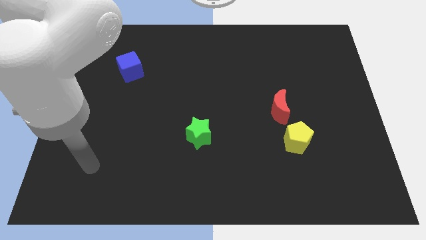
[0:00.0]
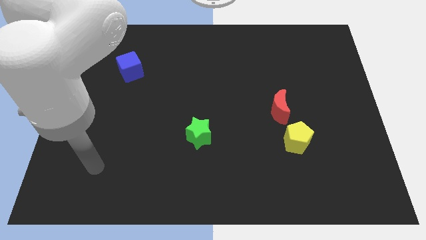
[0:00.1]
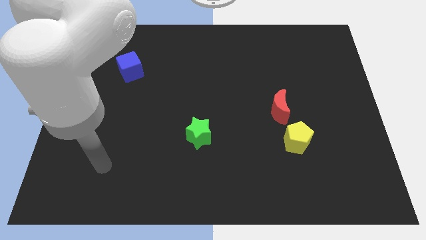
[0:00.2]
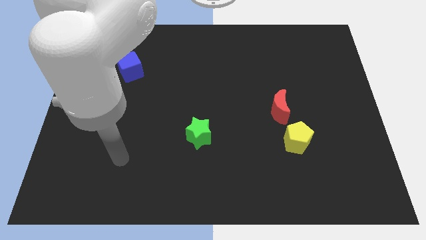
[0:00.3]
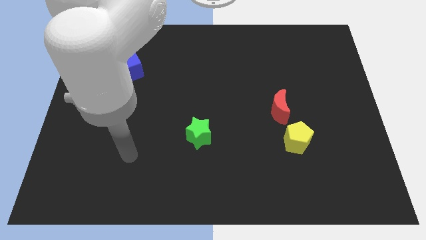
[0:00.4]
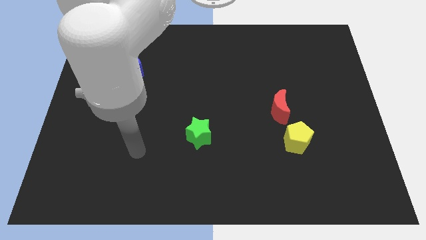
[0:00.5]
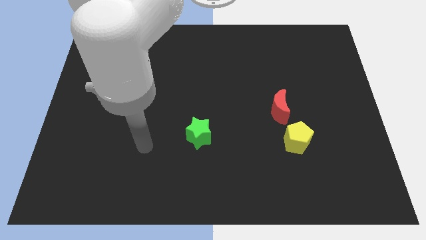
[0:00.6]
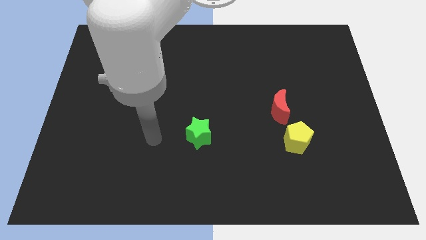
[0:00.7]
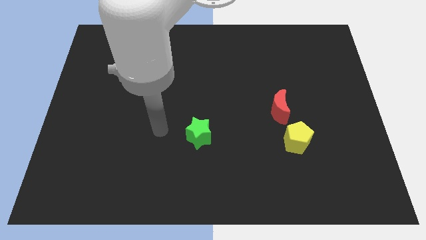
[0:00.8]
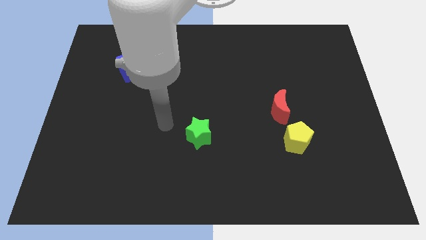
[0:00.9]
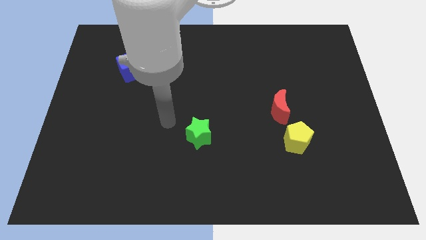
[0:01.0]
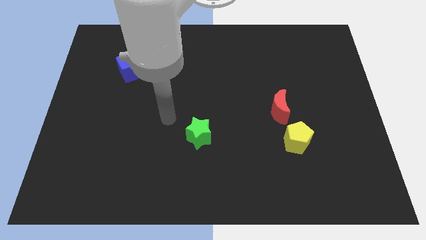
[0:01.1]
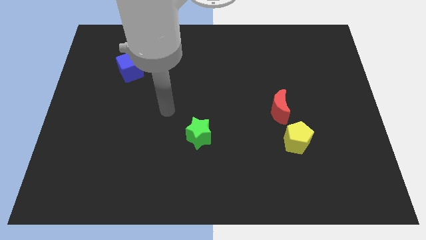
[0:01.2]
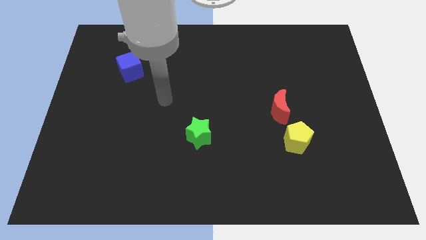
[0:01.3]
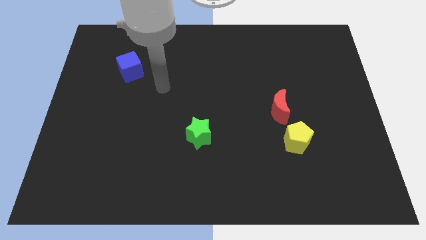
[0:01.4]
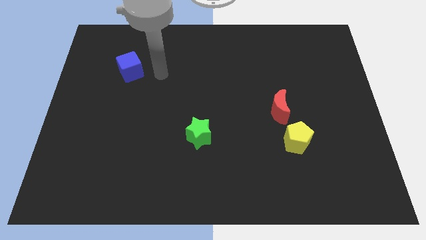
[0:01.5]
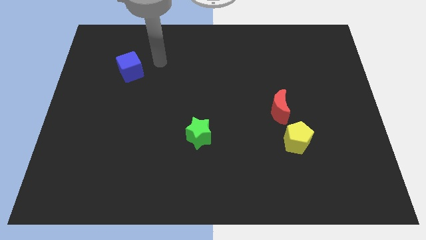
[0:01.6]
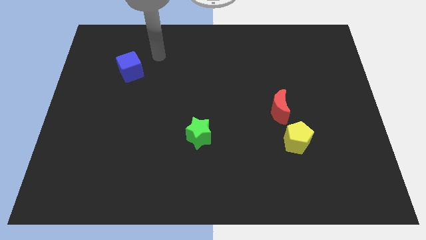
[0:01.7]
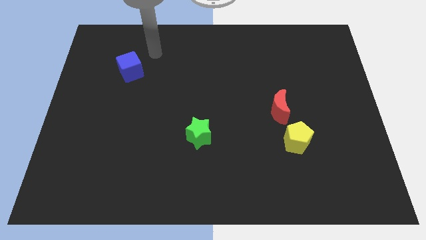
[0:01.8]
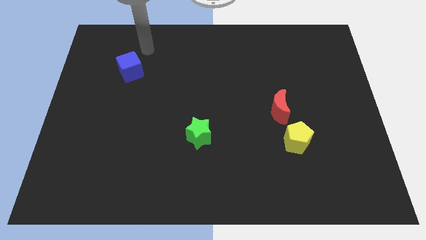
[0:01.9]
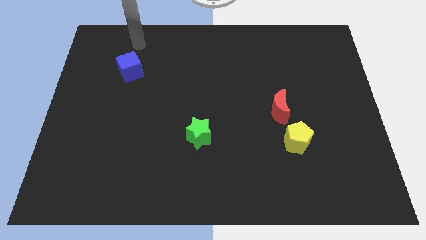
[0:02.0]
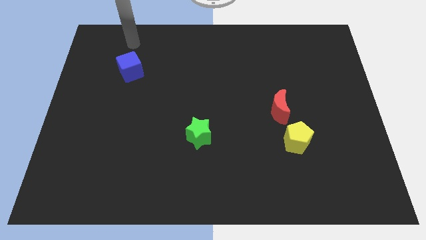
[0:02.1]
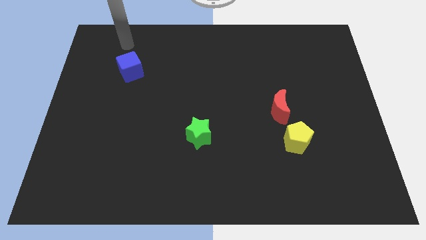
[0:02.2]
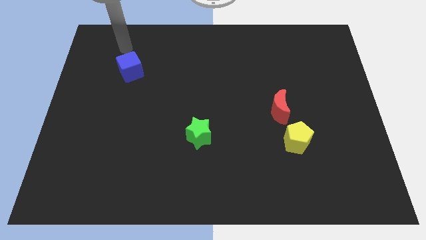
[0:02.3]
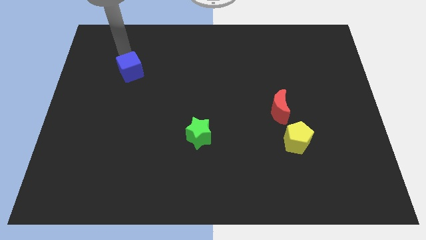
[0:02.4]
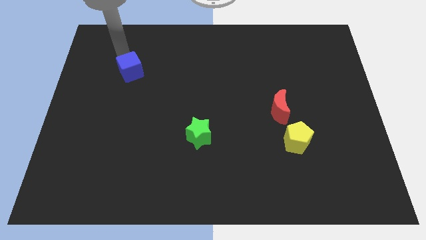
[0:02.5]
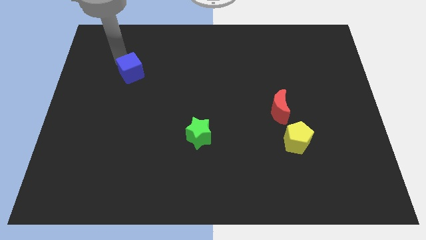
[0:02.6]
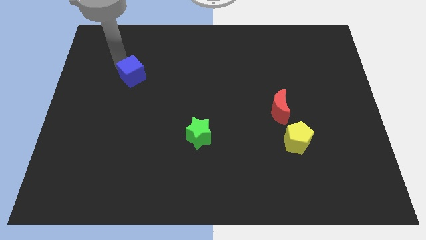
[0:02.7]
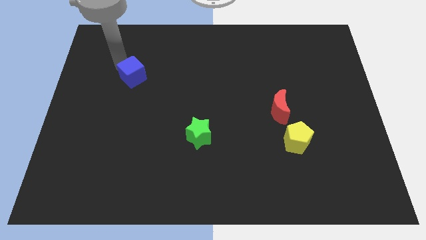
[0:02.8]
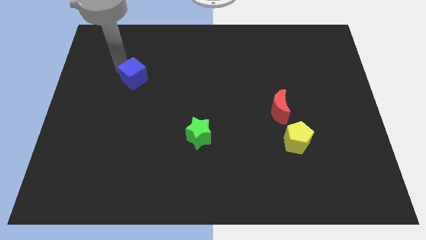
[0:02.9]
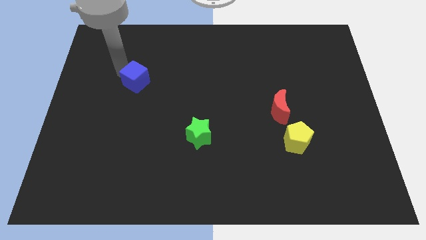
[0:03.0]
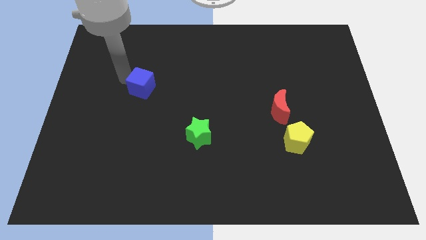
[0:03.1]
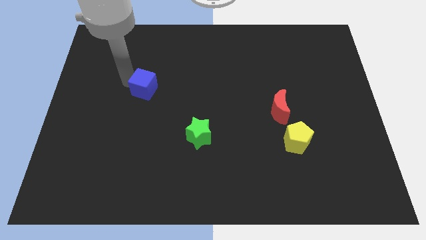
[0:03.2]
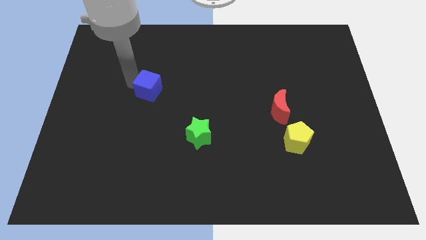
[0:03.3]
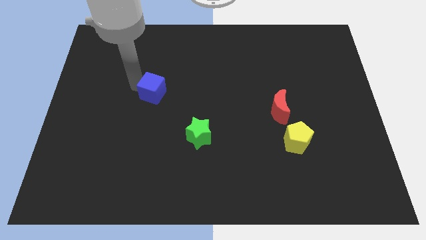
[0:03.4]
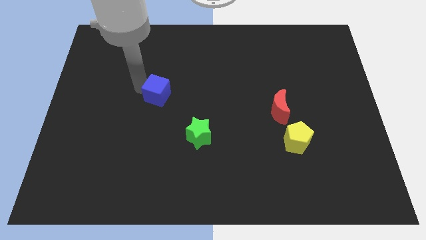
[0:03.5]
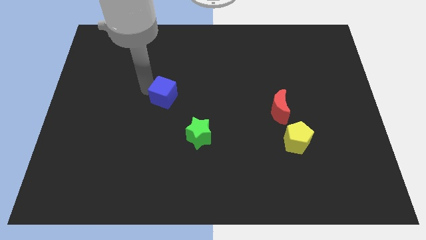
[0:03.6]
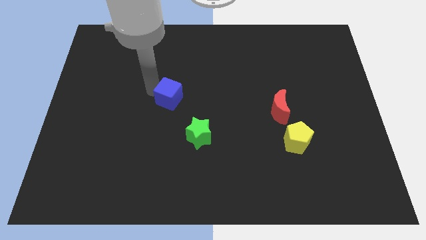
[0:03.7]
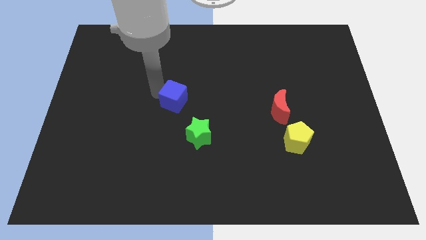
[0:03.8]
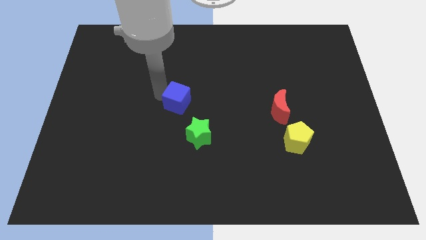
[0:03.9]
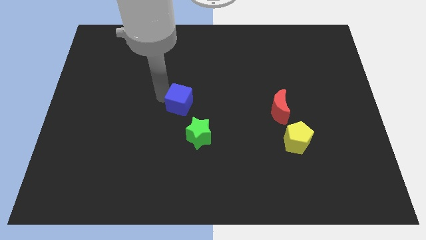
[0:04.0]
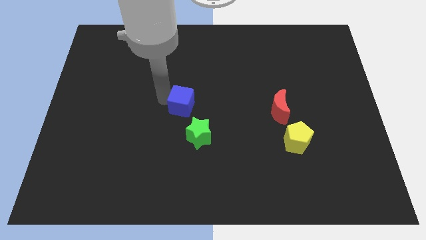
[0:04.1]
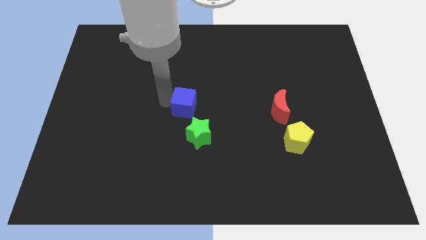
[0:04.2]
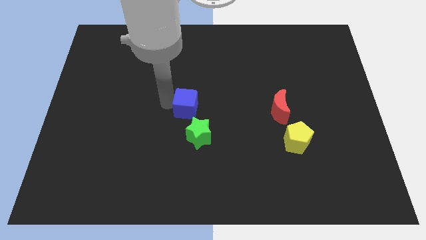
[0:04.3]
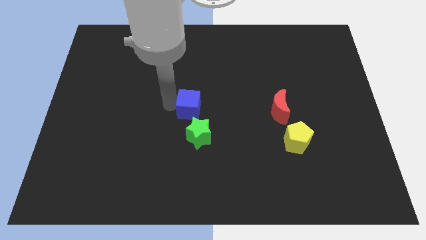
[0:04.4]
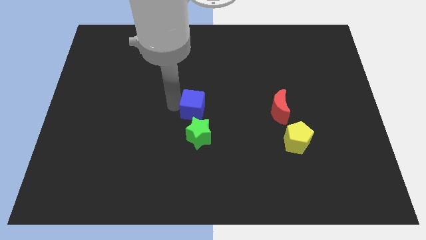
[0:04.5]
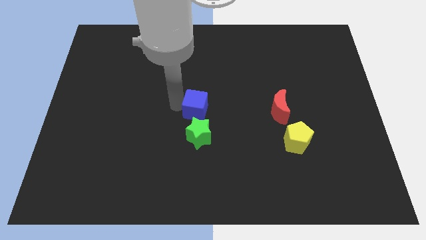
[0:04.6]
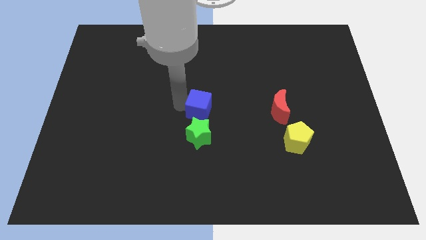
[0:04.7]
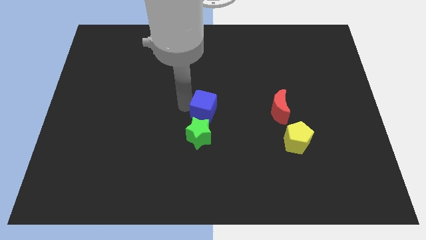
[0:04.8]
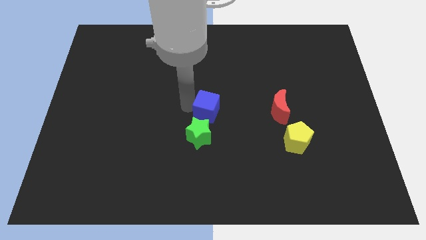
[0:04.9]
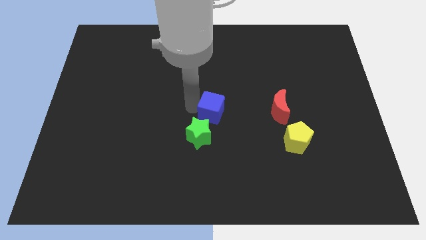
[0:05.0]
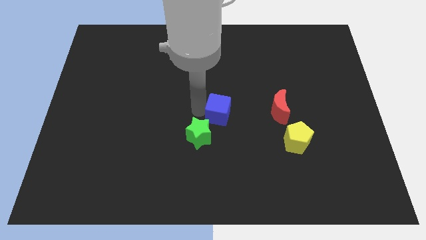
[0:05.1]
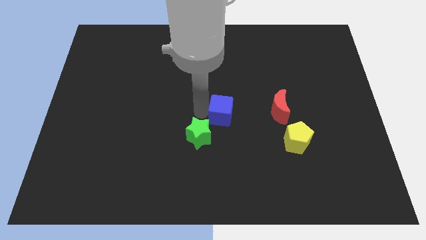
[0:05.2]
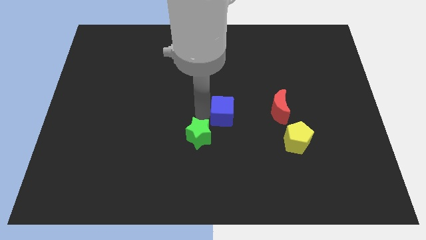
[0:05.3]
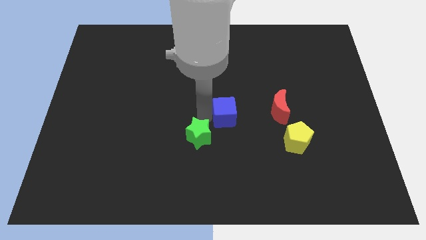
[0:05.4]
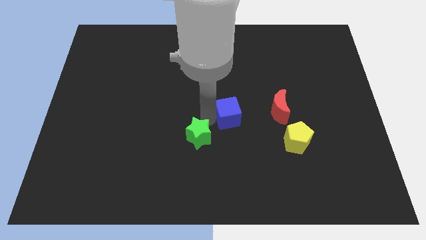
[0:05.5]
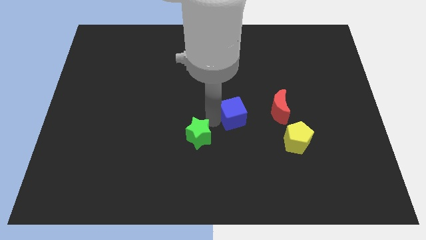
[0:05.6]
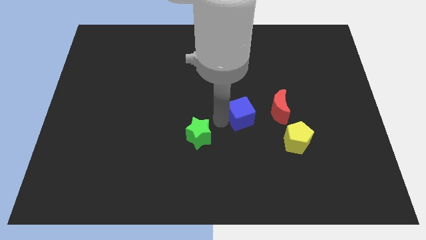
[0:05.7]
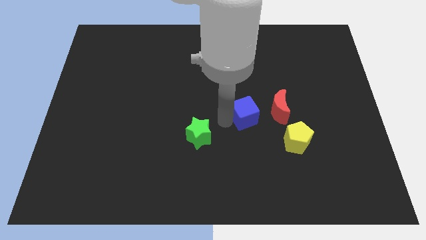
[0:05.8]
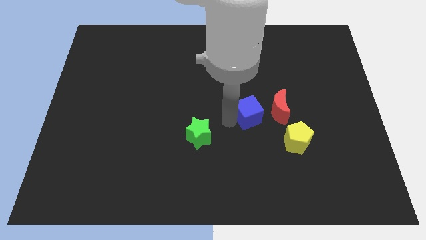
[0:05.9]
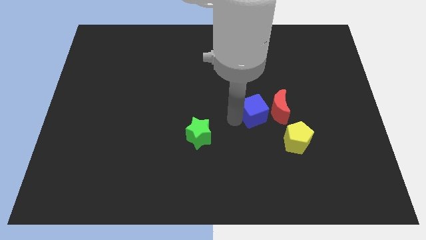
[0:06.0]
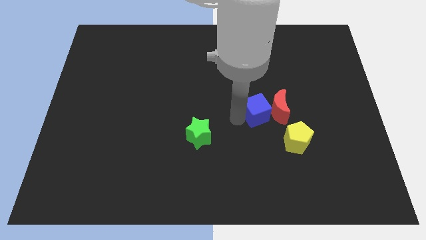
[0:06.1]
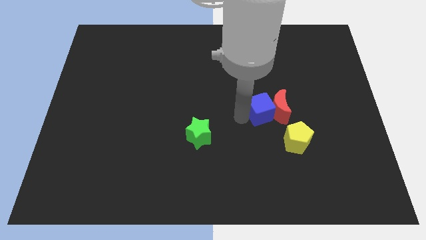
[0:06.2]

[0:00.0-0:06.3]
push the blue block to the red moon

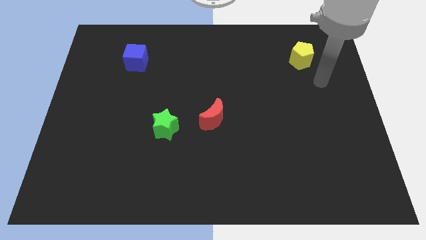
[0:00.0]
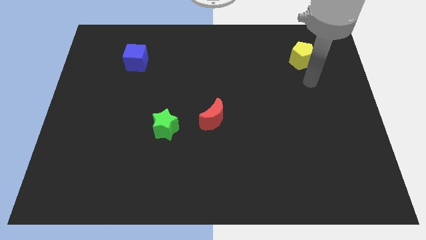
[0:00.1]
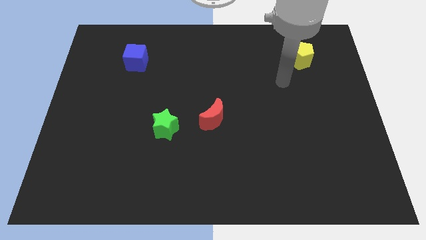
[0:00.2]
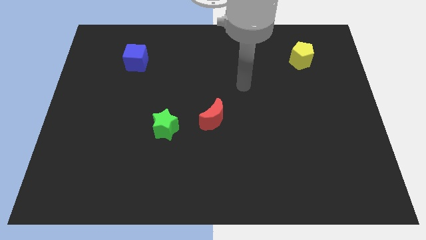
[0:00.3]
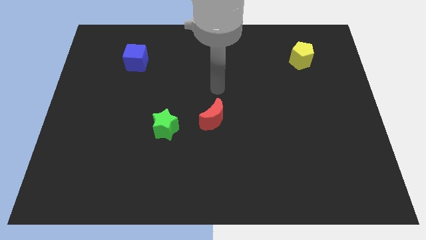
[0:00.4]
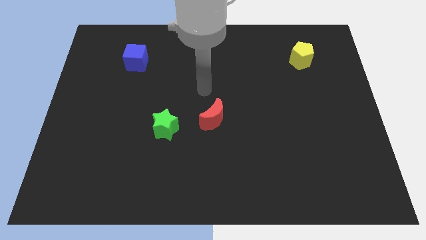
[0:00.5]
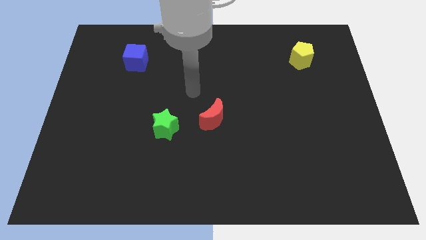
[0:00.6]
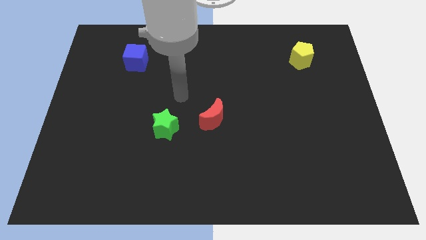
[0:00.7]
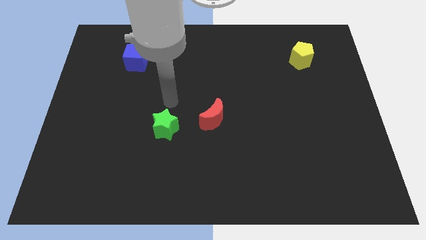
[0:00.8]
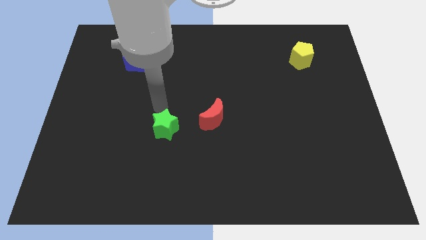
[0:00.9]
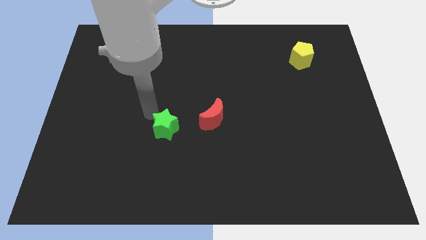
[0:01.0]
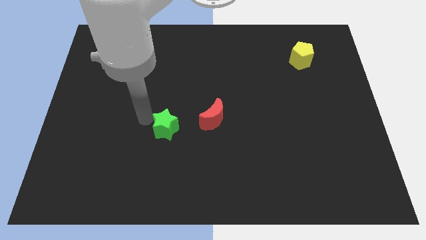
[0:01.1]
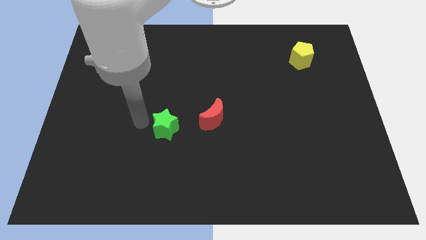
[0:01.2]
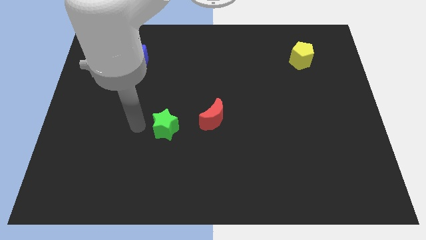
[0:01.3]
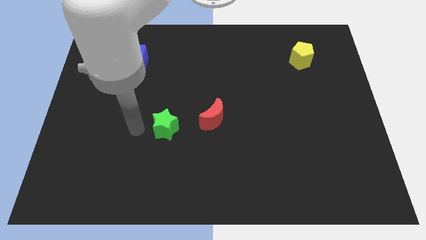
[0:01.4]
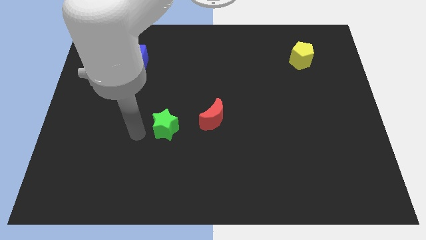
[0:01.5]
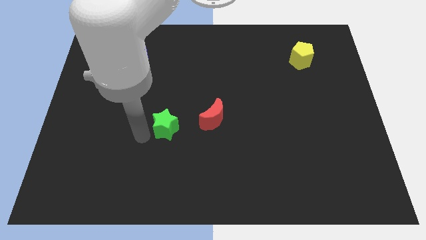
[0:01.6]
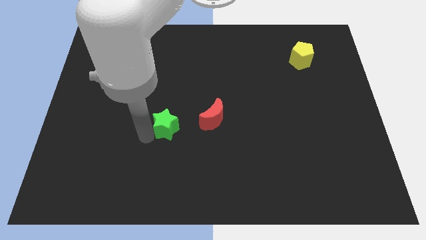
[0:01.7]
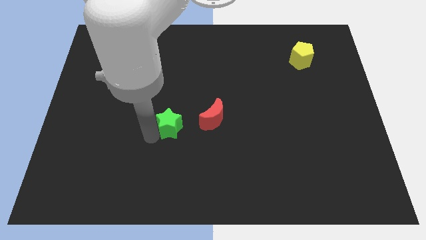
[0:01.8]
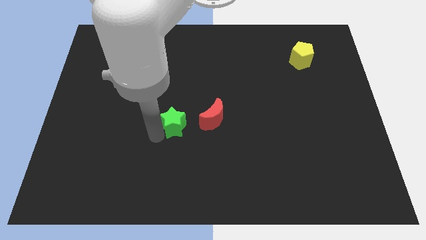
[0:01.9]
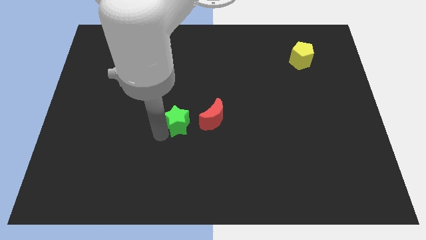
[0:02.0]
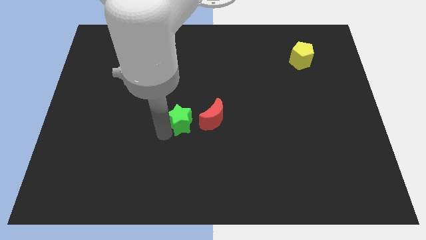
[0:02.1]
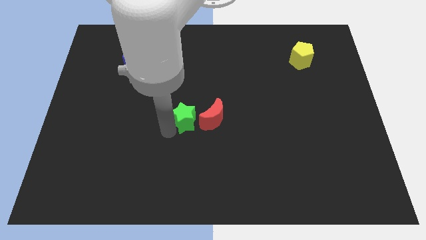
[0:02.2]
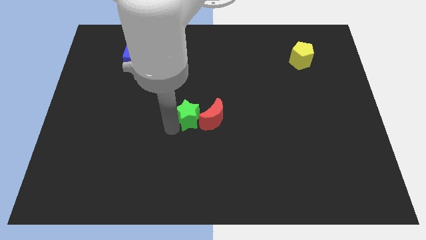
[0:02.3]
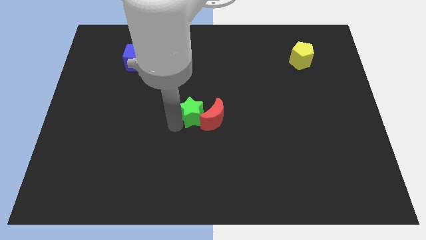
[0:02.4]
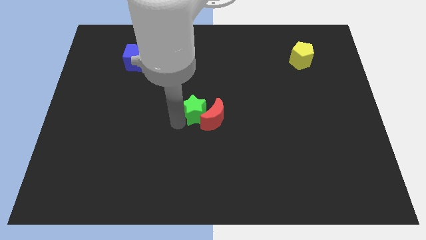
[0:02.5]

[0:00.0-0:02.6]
slide the star towards the red moon
